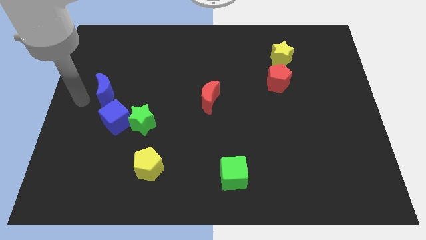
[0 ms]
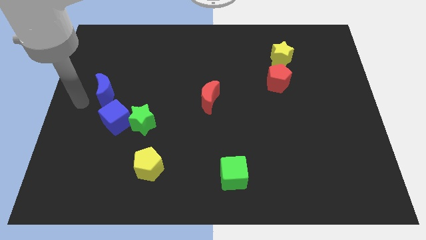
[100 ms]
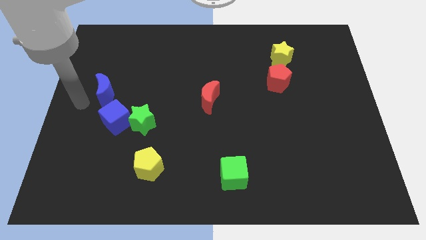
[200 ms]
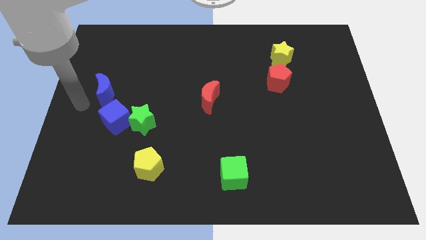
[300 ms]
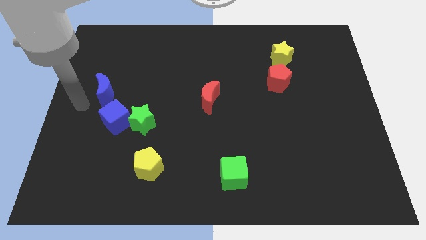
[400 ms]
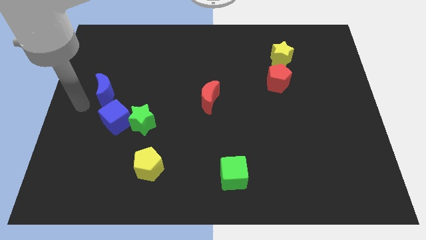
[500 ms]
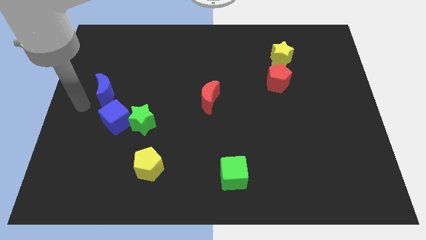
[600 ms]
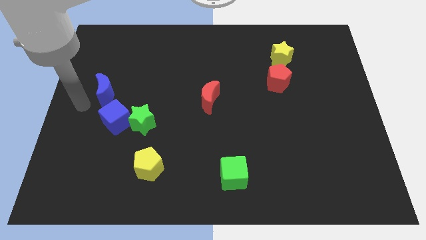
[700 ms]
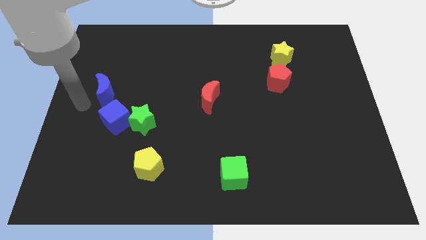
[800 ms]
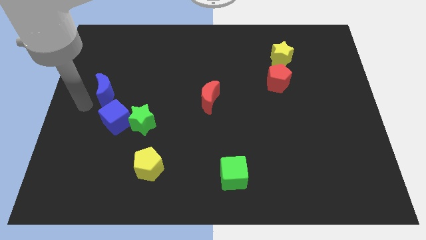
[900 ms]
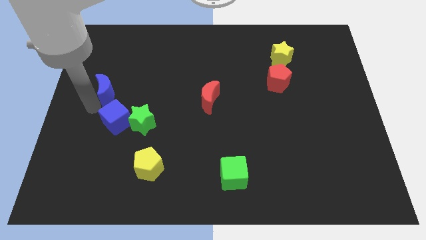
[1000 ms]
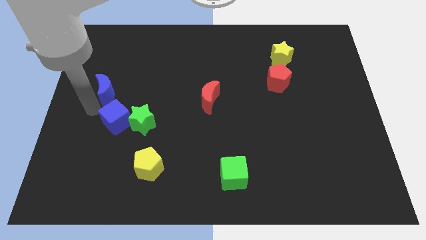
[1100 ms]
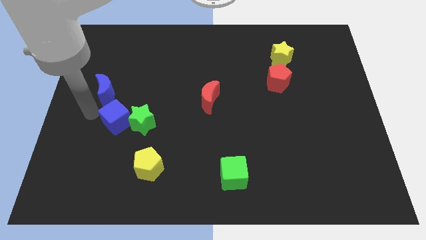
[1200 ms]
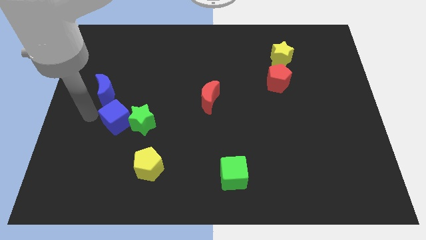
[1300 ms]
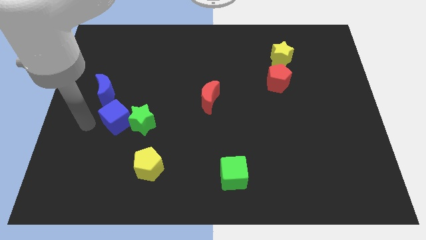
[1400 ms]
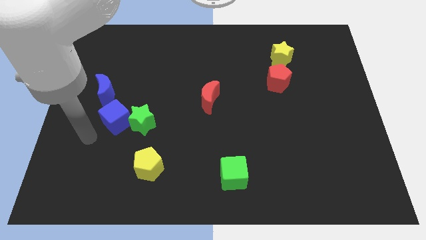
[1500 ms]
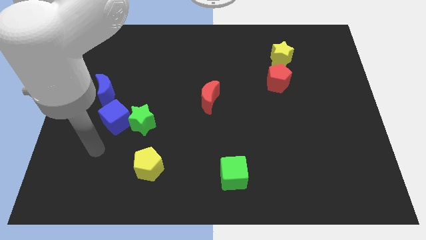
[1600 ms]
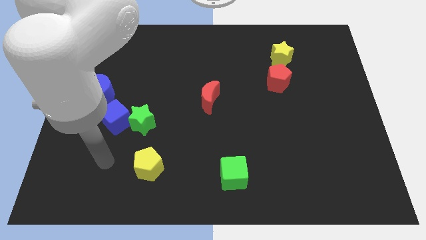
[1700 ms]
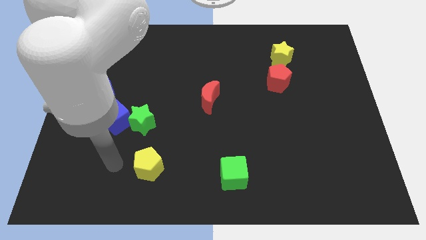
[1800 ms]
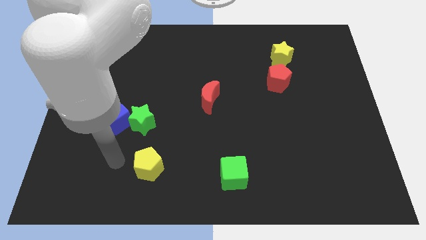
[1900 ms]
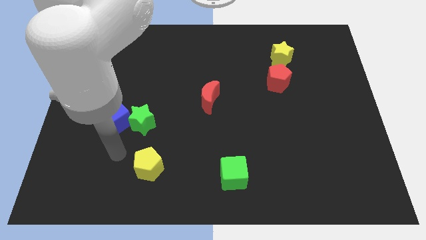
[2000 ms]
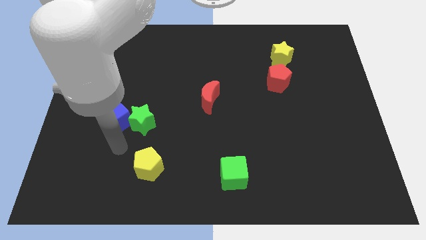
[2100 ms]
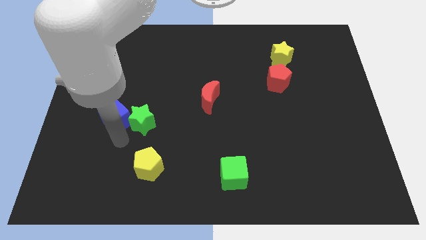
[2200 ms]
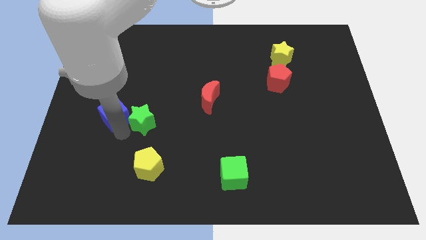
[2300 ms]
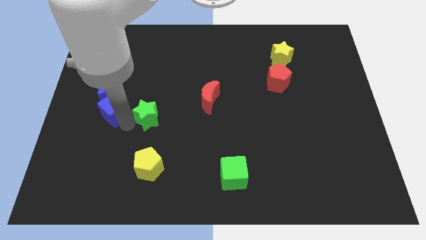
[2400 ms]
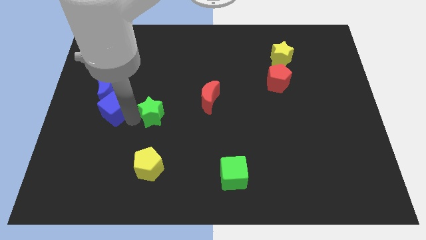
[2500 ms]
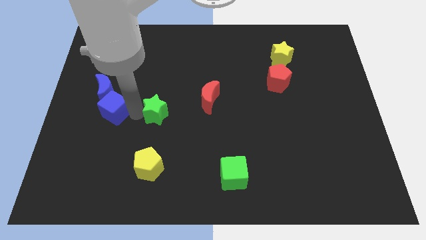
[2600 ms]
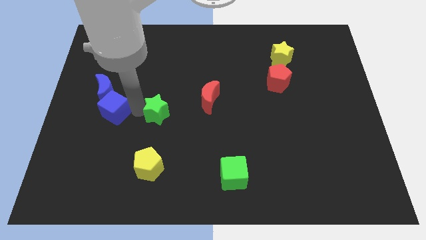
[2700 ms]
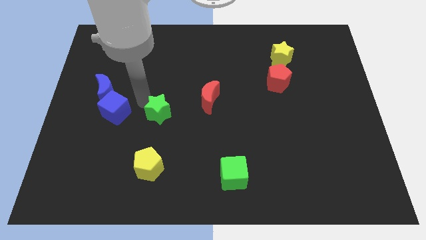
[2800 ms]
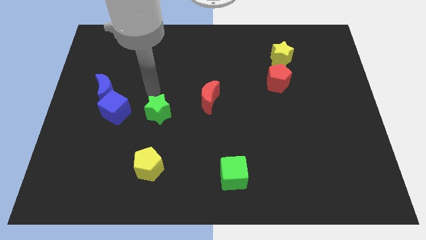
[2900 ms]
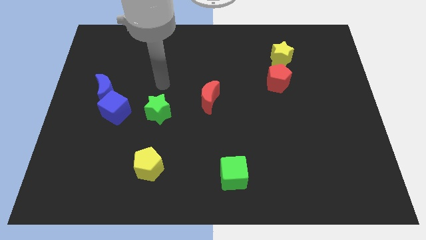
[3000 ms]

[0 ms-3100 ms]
separate the blue cube and green star from each other

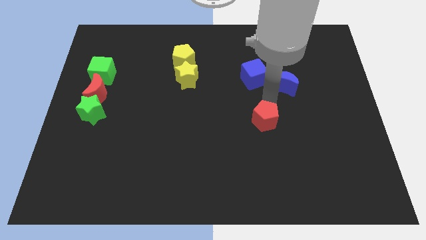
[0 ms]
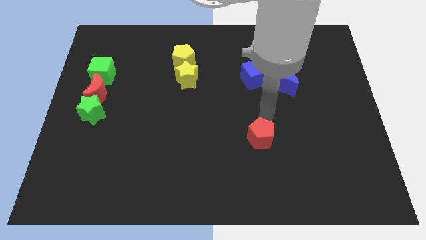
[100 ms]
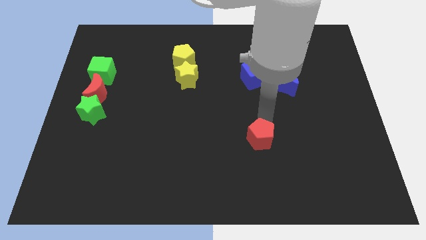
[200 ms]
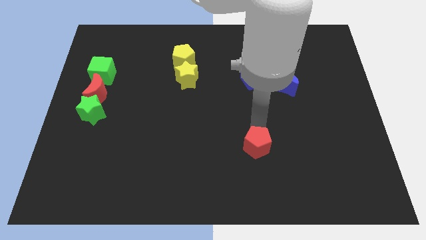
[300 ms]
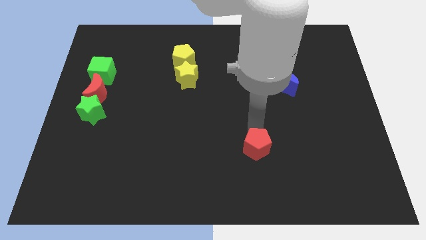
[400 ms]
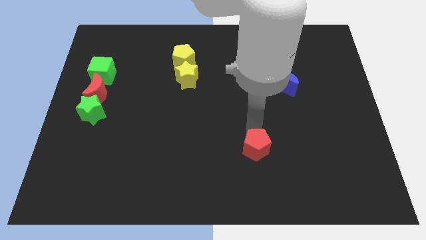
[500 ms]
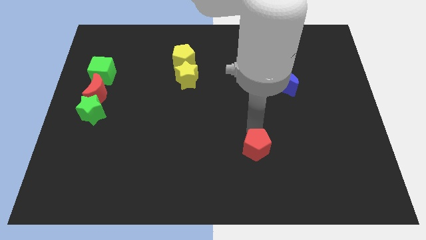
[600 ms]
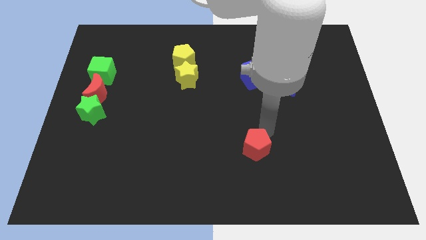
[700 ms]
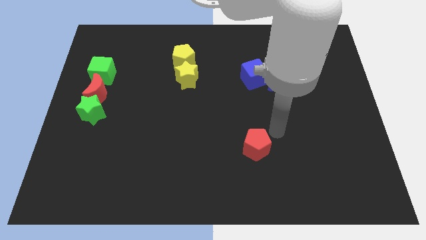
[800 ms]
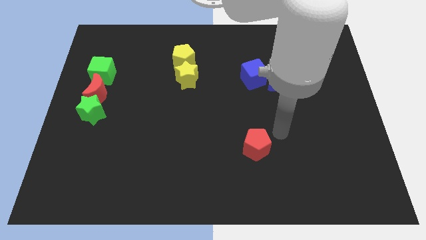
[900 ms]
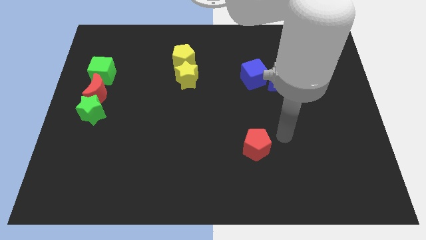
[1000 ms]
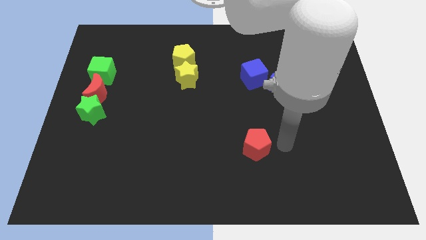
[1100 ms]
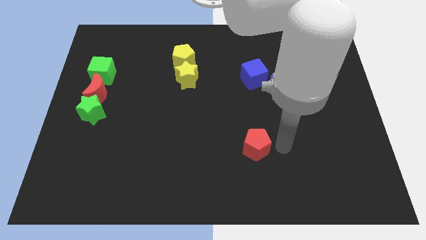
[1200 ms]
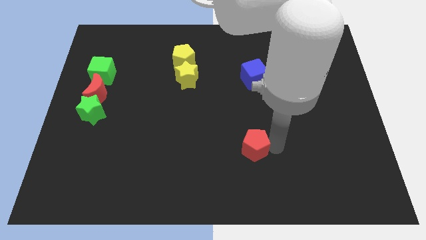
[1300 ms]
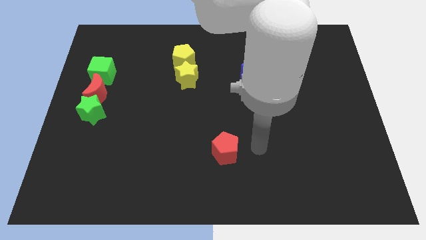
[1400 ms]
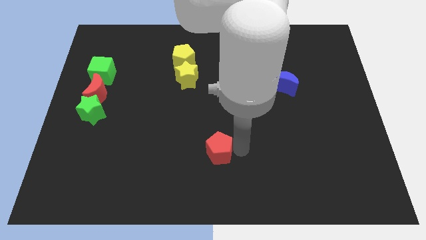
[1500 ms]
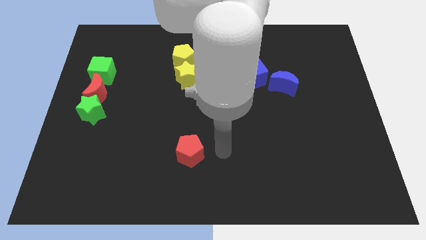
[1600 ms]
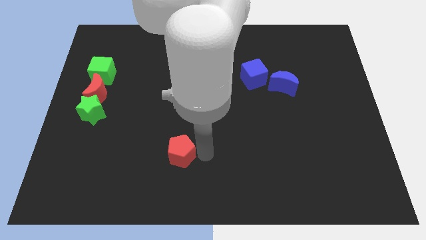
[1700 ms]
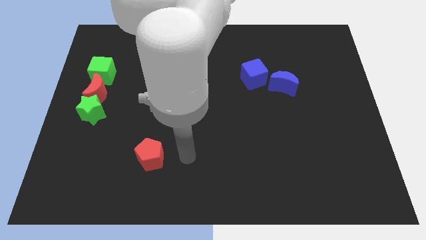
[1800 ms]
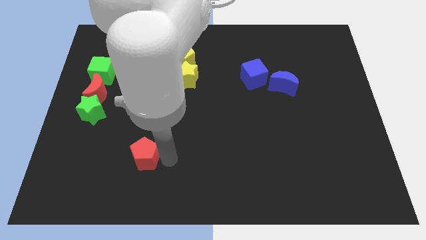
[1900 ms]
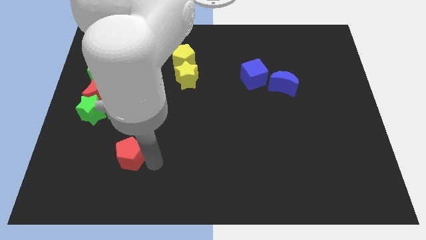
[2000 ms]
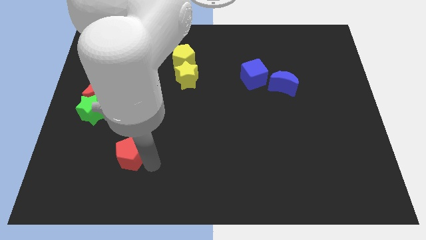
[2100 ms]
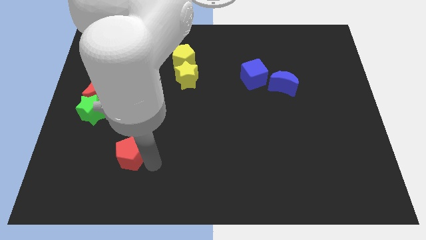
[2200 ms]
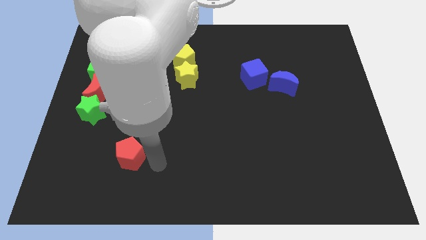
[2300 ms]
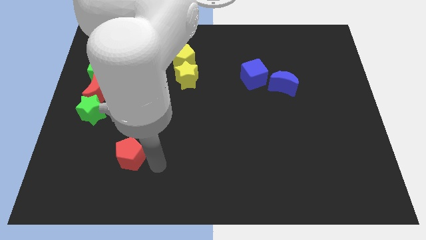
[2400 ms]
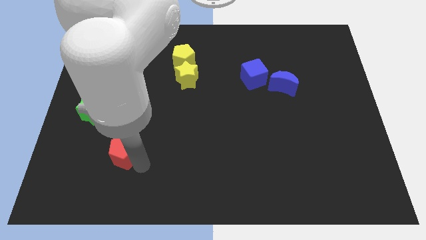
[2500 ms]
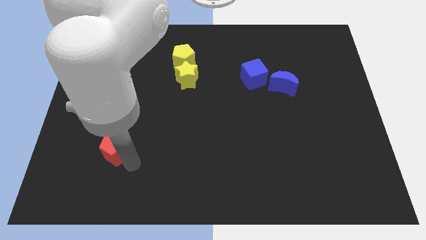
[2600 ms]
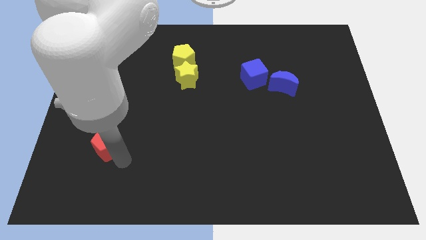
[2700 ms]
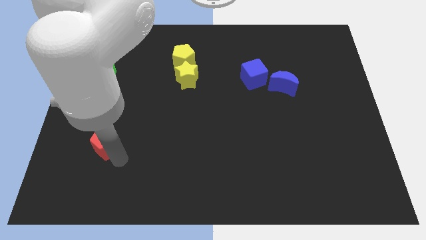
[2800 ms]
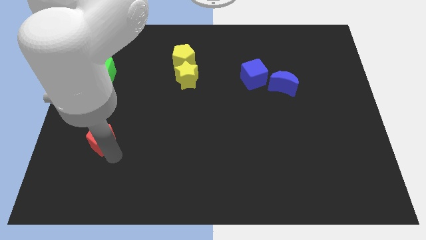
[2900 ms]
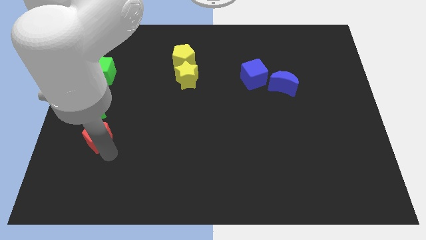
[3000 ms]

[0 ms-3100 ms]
place red pentagon below green star

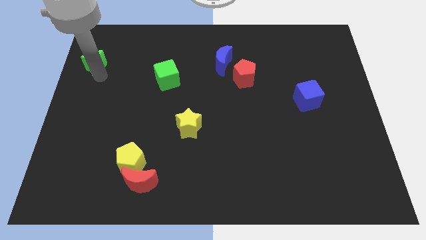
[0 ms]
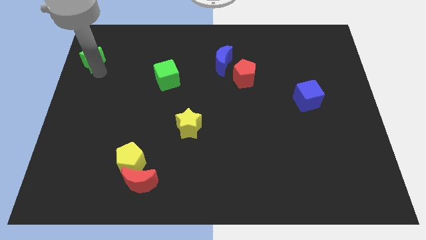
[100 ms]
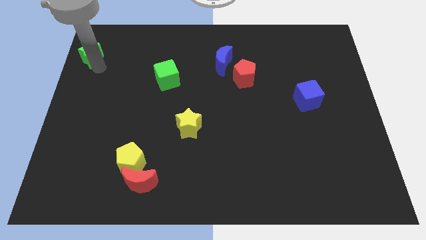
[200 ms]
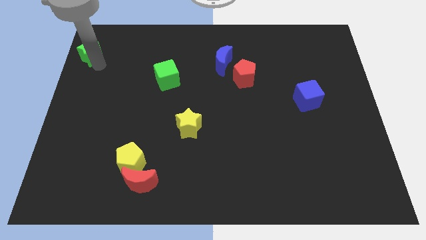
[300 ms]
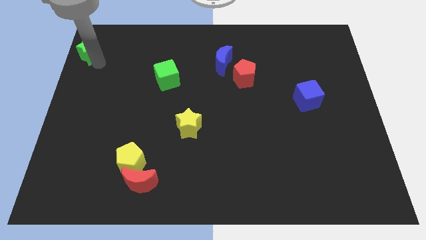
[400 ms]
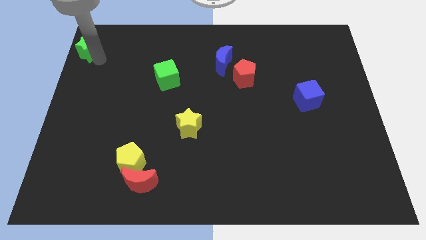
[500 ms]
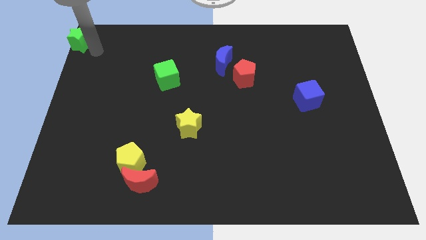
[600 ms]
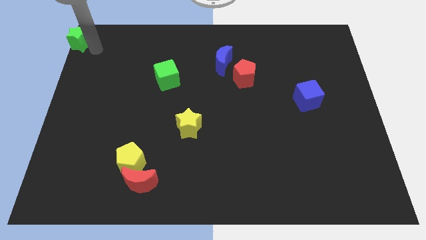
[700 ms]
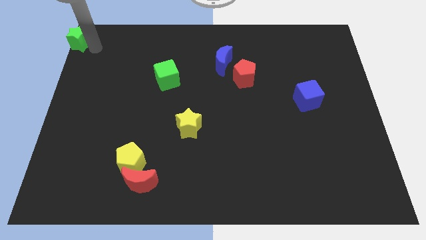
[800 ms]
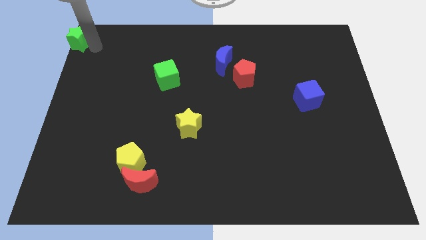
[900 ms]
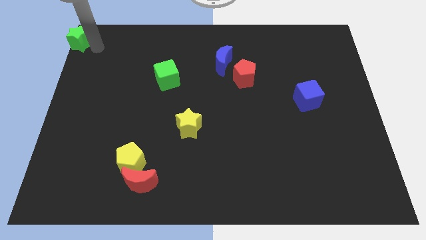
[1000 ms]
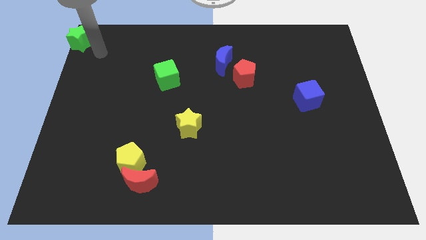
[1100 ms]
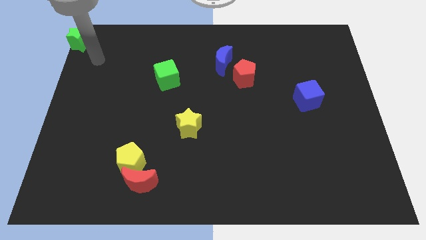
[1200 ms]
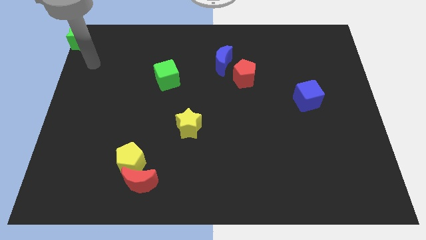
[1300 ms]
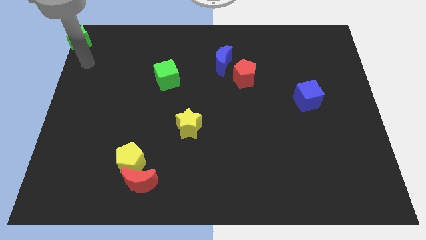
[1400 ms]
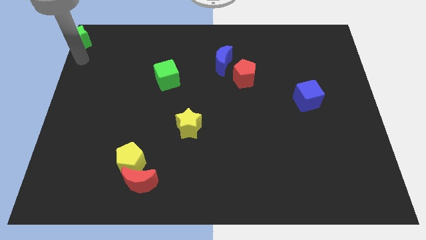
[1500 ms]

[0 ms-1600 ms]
move the green star to the top left

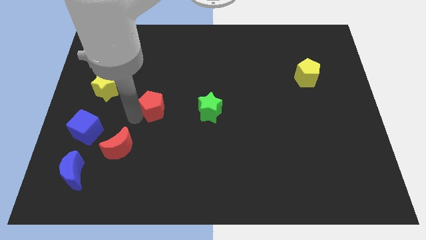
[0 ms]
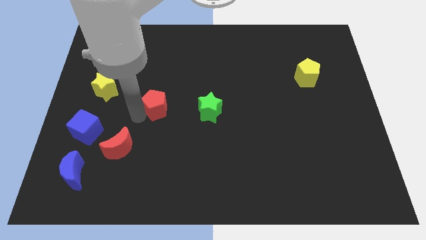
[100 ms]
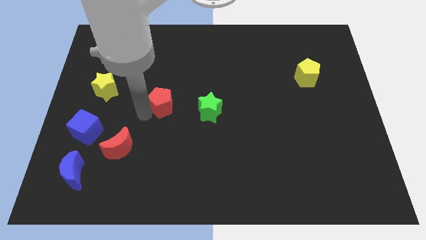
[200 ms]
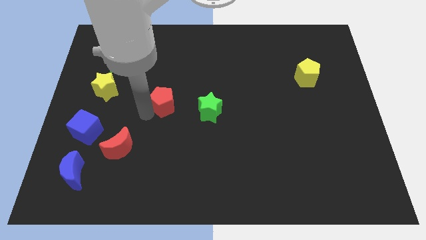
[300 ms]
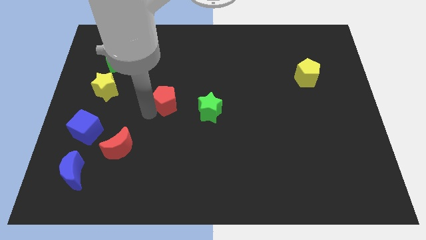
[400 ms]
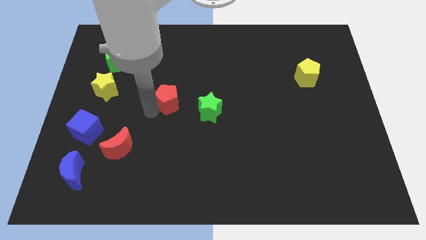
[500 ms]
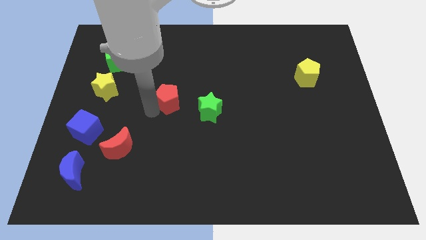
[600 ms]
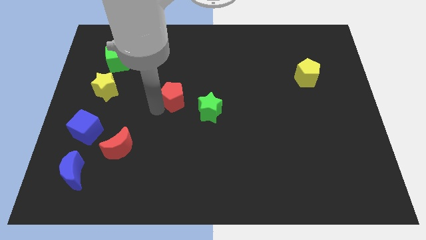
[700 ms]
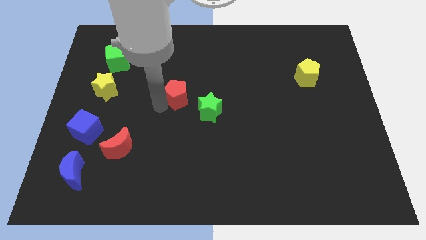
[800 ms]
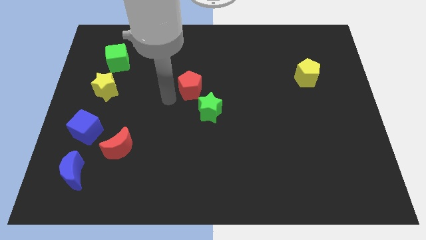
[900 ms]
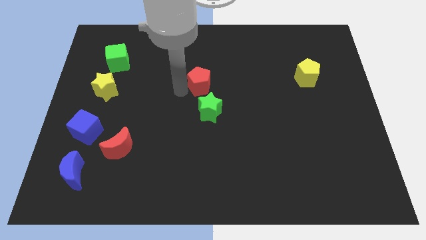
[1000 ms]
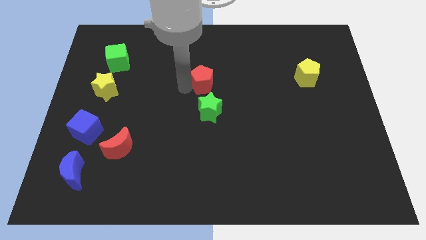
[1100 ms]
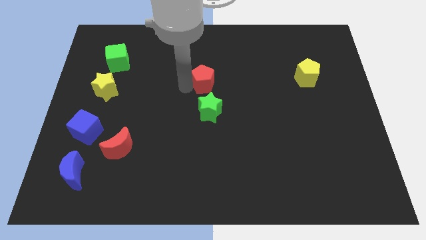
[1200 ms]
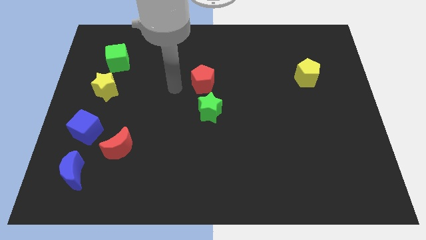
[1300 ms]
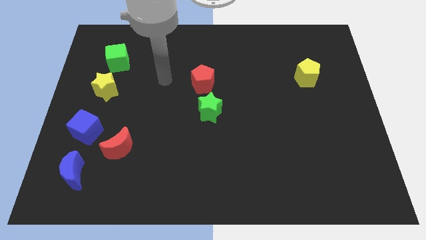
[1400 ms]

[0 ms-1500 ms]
push the red pentagon vertically to the top side of the green star
